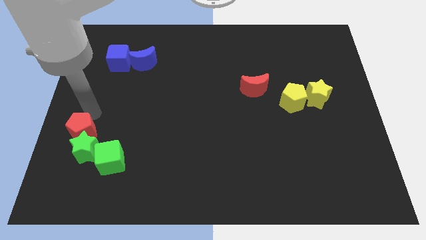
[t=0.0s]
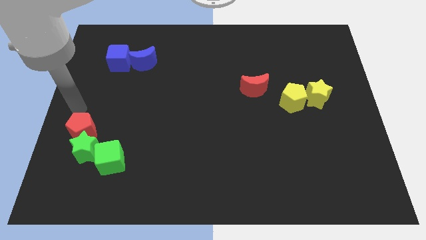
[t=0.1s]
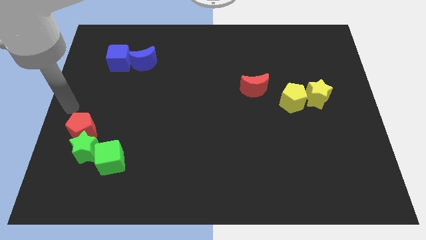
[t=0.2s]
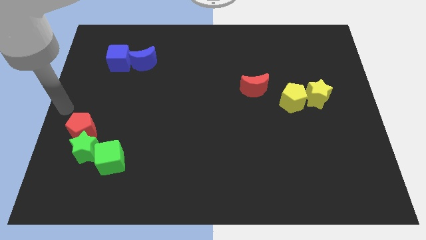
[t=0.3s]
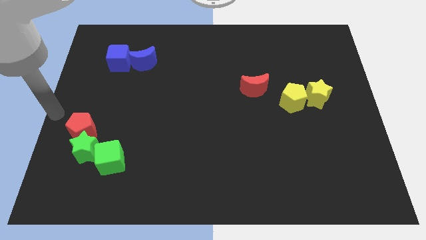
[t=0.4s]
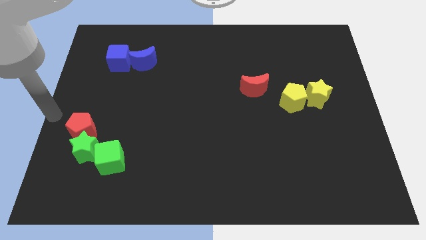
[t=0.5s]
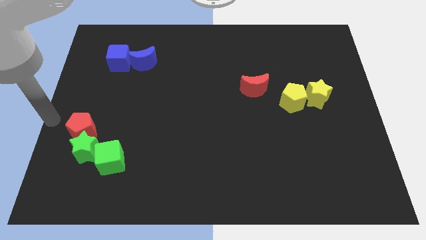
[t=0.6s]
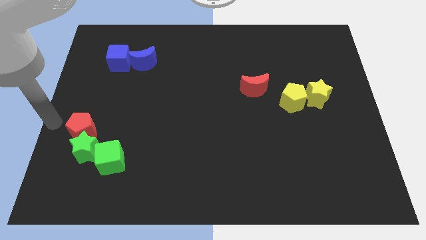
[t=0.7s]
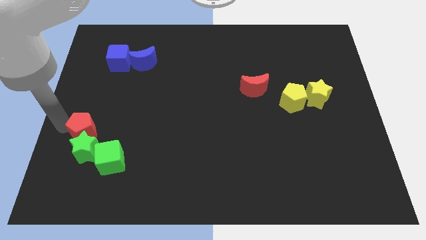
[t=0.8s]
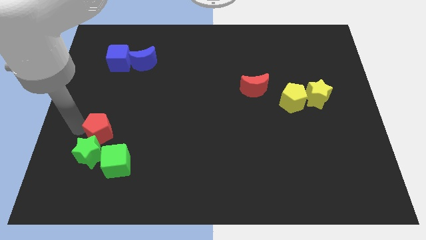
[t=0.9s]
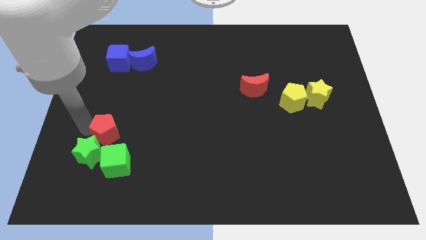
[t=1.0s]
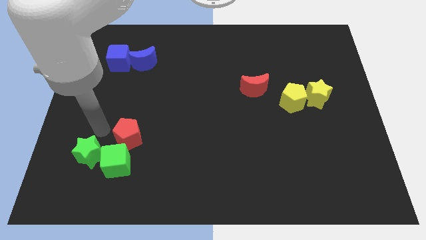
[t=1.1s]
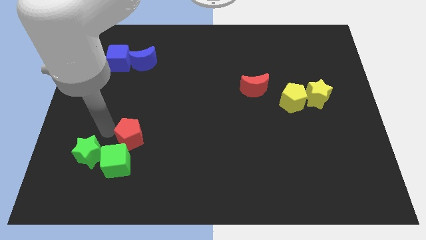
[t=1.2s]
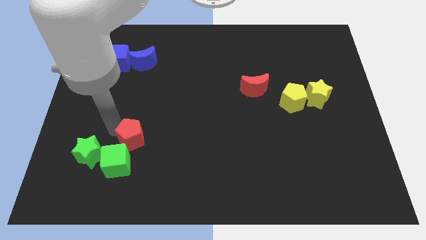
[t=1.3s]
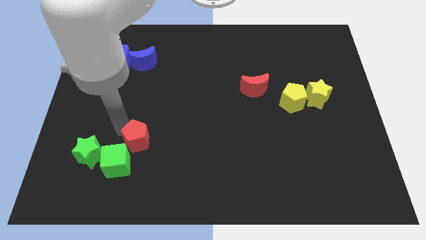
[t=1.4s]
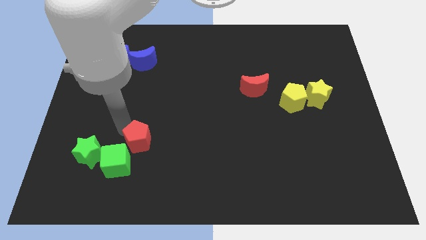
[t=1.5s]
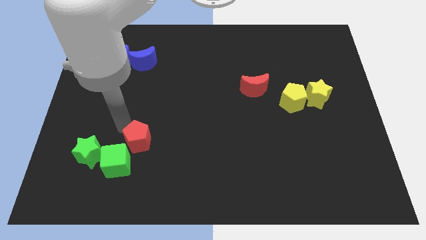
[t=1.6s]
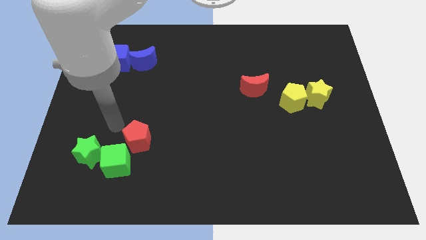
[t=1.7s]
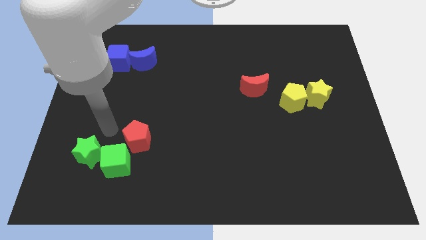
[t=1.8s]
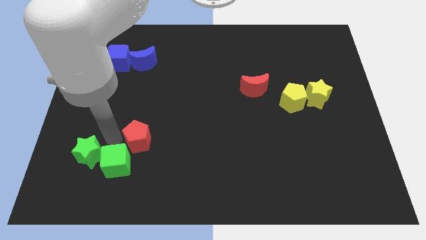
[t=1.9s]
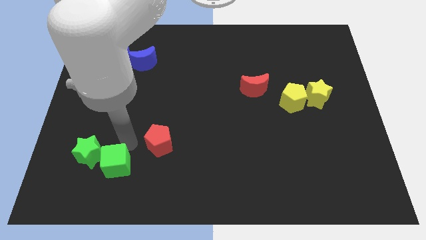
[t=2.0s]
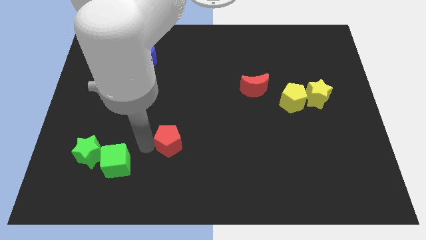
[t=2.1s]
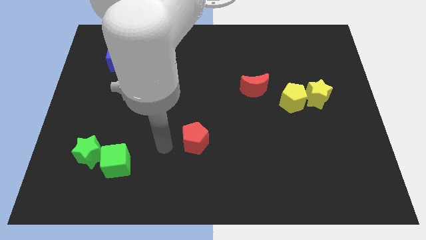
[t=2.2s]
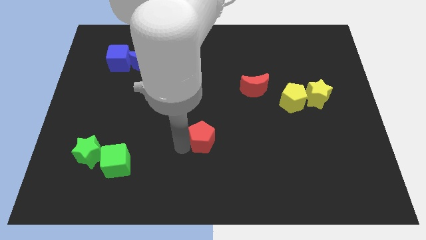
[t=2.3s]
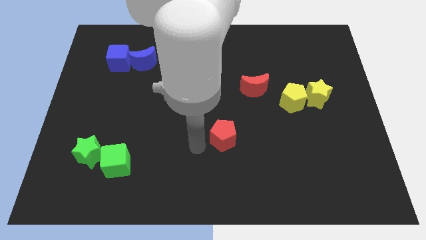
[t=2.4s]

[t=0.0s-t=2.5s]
push red pentagon towards right side

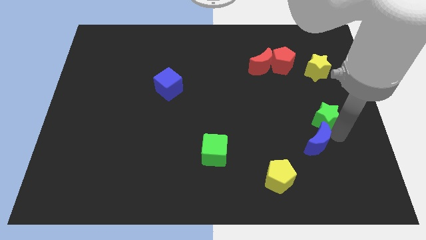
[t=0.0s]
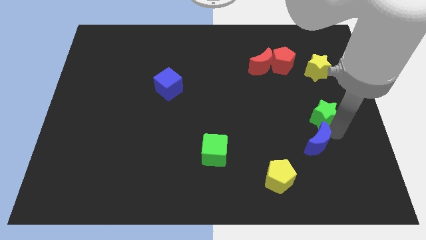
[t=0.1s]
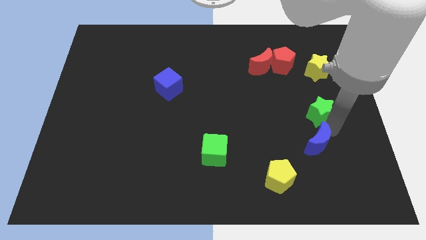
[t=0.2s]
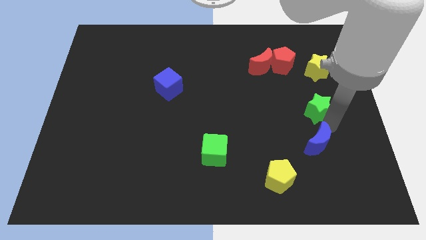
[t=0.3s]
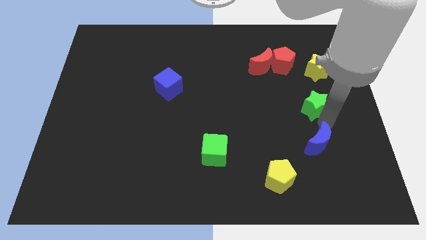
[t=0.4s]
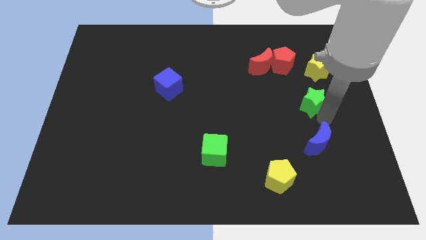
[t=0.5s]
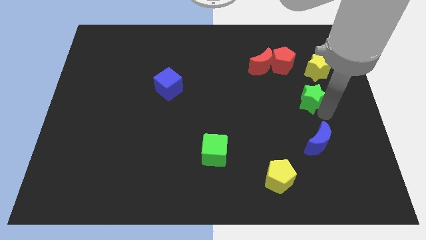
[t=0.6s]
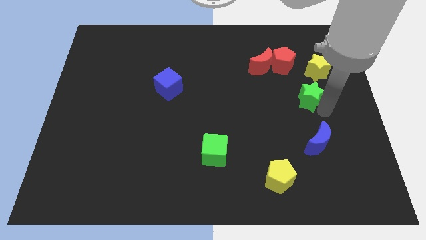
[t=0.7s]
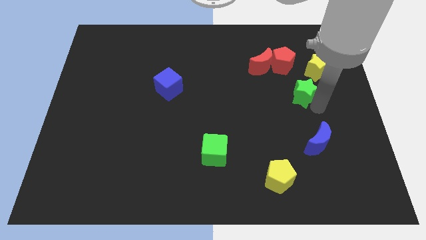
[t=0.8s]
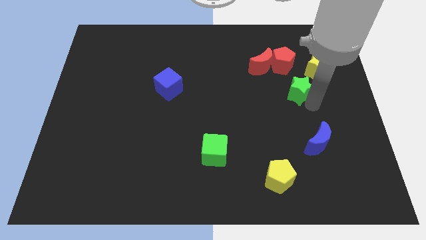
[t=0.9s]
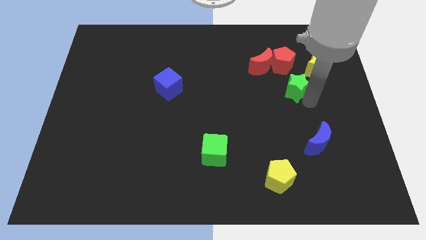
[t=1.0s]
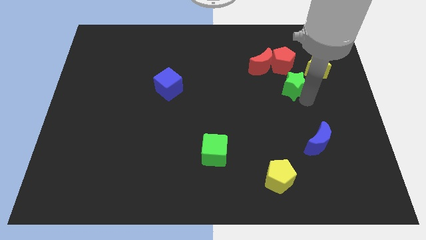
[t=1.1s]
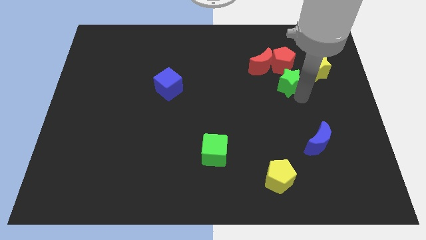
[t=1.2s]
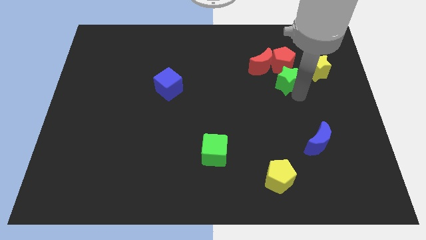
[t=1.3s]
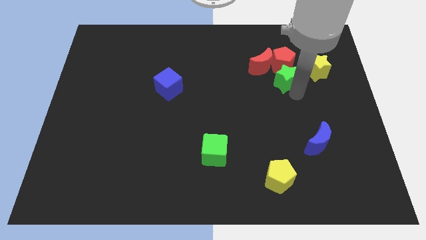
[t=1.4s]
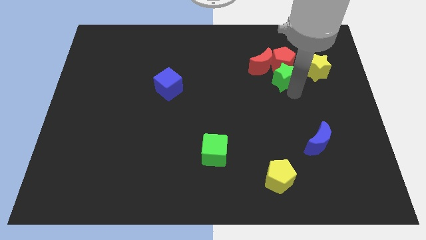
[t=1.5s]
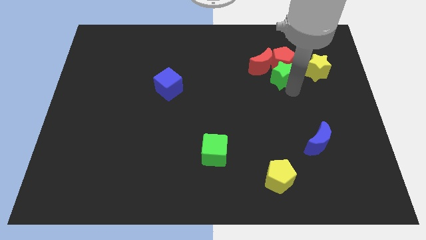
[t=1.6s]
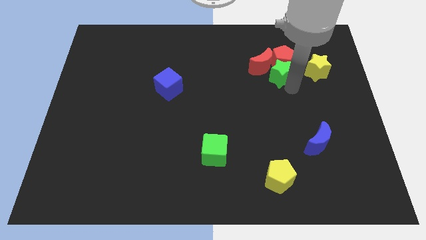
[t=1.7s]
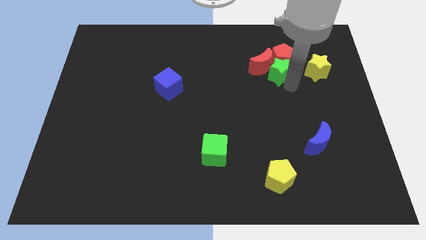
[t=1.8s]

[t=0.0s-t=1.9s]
move green star into red blocks

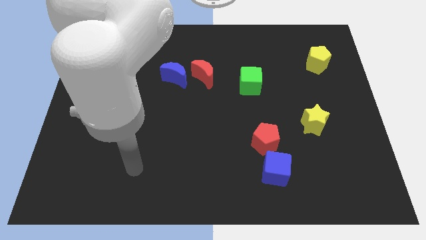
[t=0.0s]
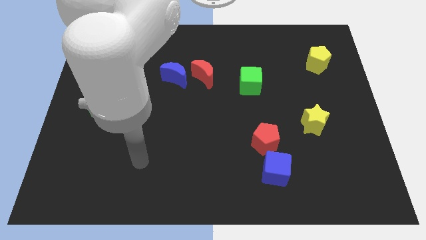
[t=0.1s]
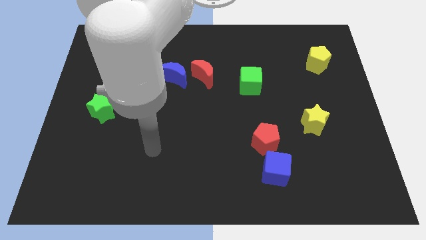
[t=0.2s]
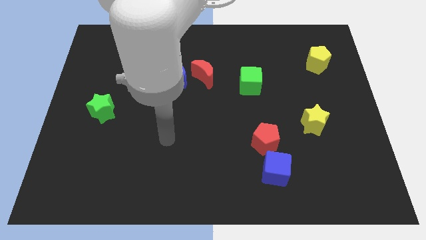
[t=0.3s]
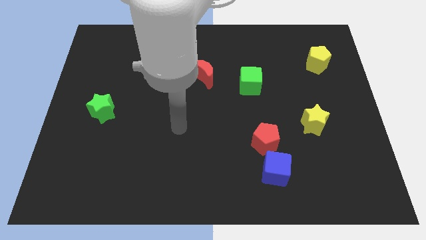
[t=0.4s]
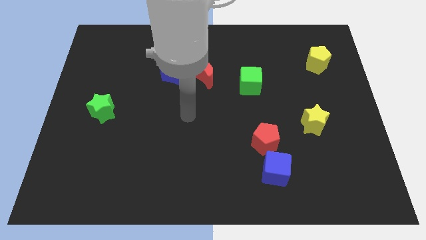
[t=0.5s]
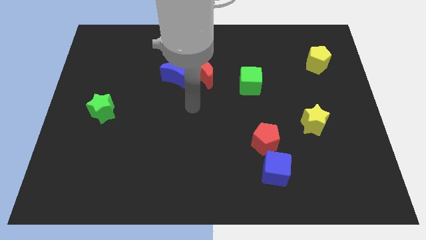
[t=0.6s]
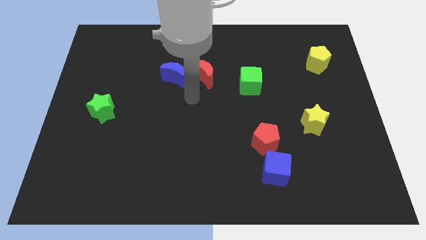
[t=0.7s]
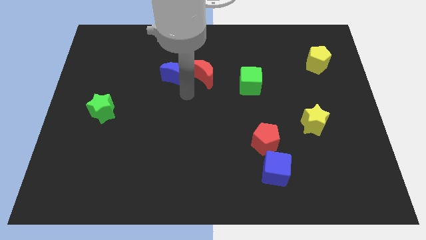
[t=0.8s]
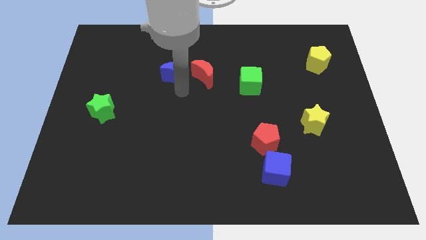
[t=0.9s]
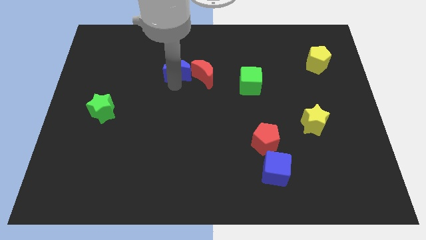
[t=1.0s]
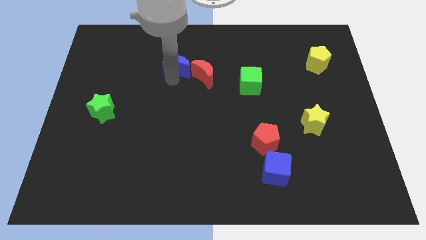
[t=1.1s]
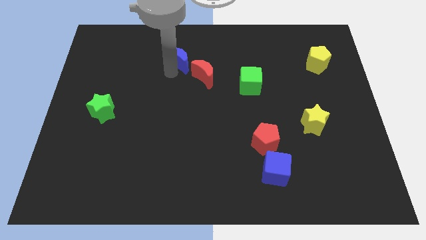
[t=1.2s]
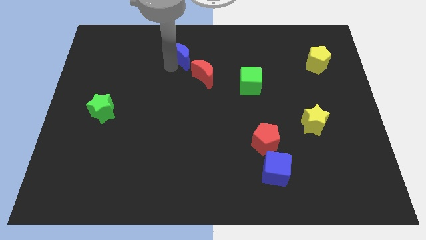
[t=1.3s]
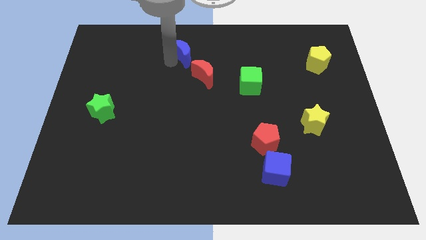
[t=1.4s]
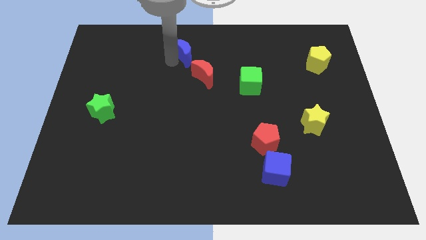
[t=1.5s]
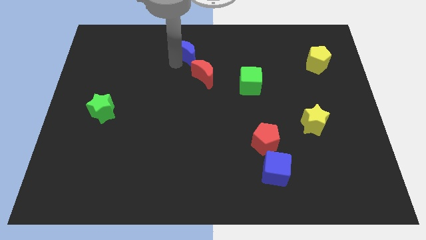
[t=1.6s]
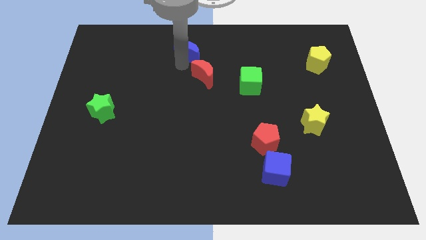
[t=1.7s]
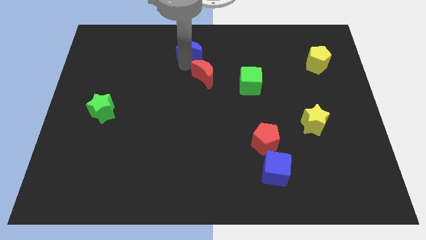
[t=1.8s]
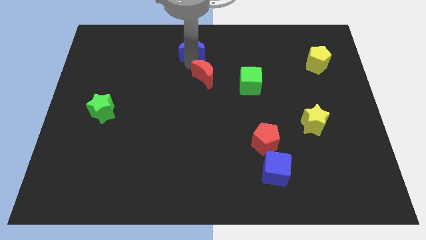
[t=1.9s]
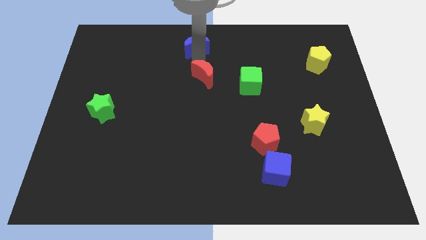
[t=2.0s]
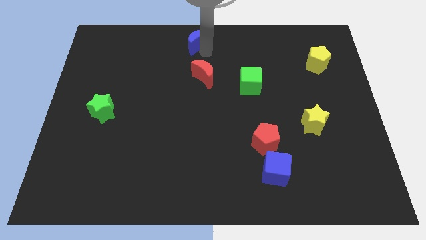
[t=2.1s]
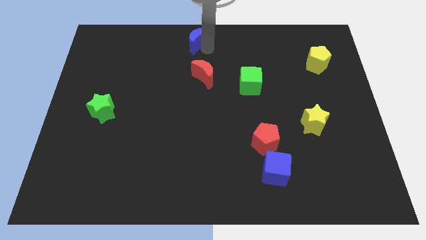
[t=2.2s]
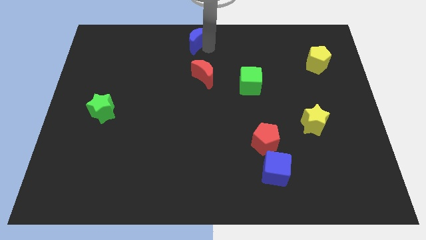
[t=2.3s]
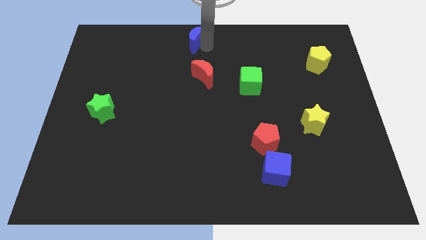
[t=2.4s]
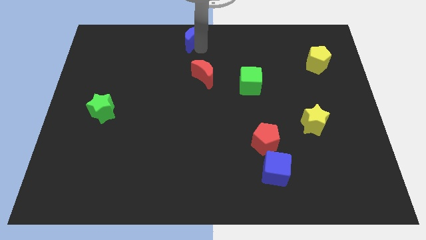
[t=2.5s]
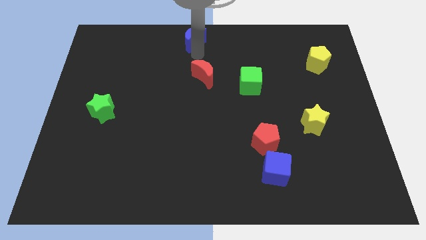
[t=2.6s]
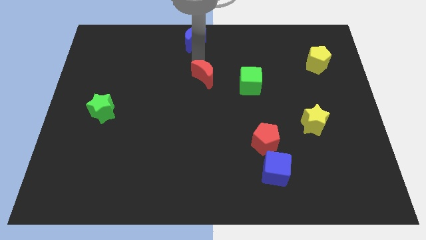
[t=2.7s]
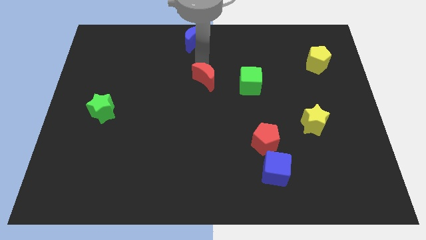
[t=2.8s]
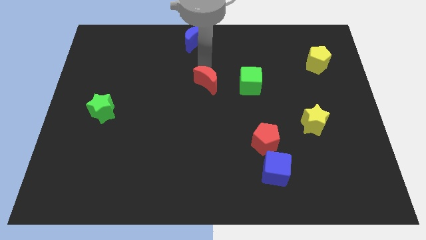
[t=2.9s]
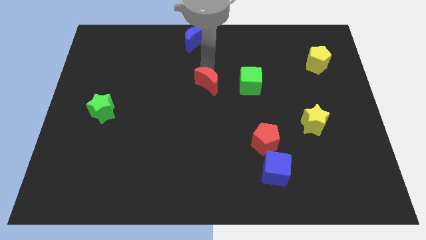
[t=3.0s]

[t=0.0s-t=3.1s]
place blue crescent above red crescent

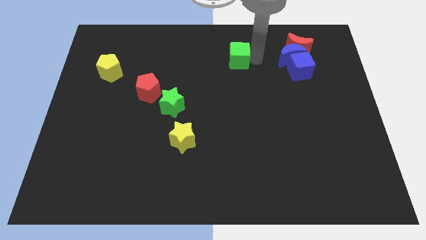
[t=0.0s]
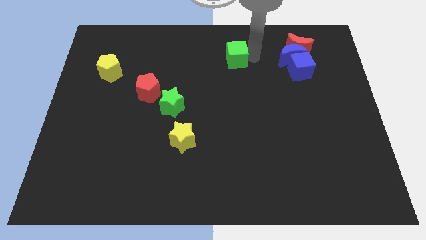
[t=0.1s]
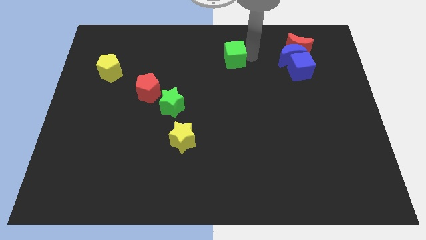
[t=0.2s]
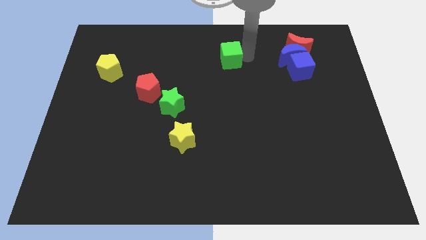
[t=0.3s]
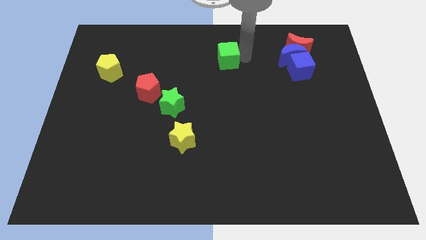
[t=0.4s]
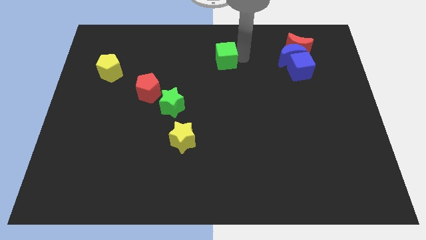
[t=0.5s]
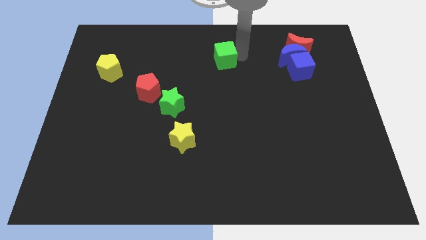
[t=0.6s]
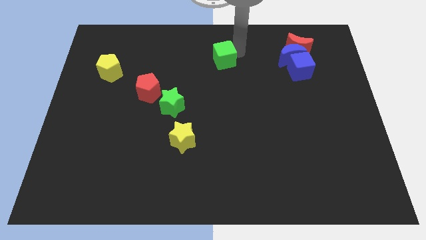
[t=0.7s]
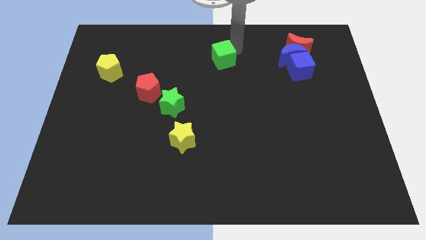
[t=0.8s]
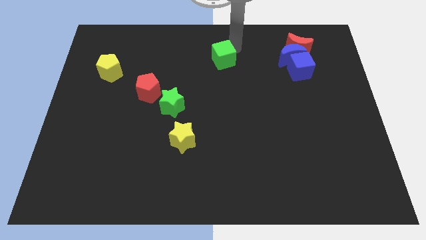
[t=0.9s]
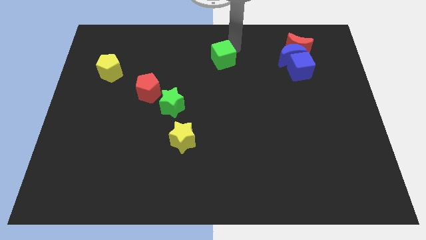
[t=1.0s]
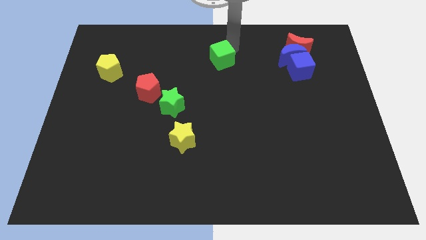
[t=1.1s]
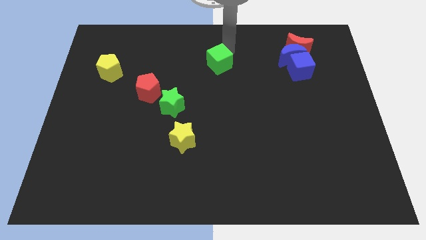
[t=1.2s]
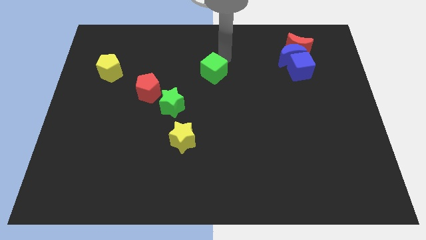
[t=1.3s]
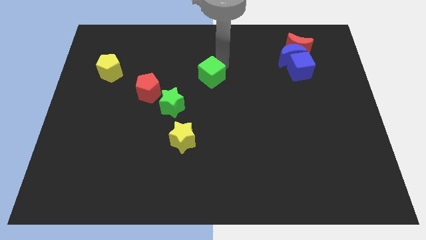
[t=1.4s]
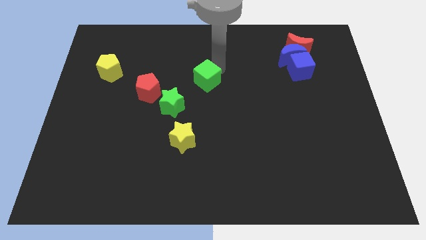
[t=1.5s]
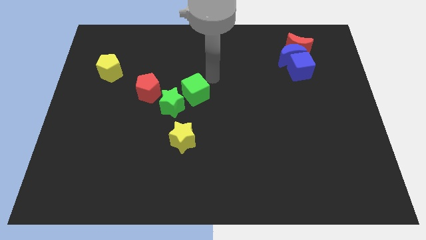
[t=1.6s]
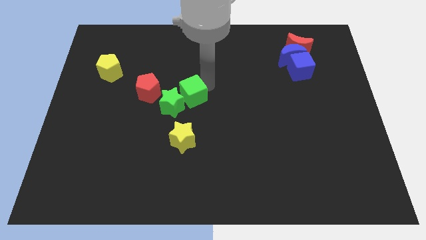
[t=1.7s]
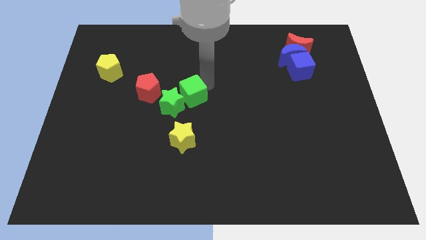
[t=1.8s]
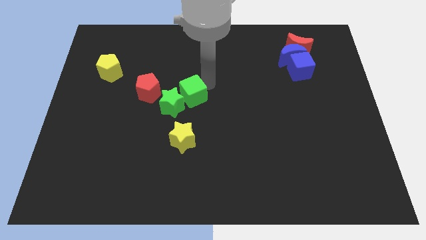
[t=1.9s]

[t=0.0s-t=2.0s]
push the green cube into the green star
